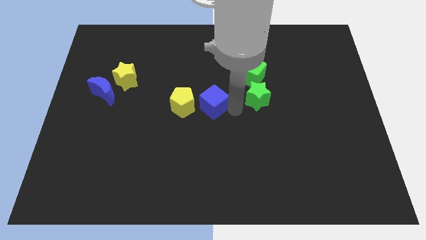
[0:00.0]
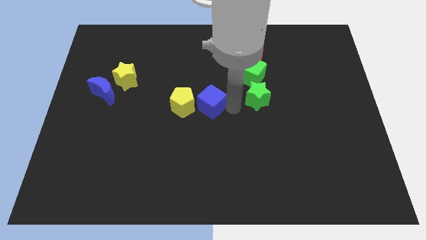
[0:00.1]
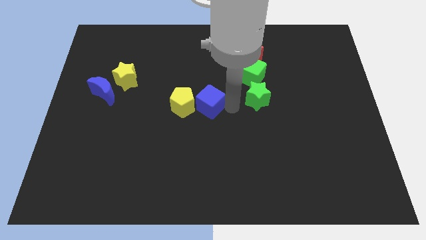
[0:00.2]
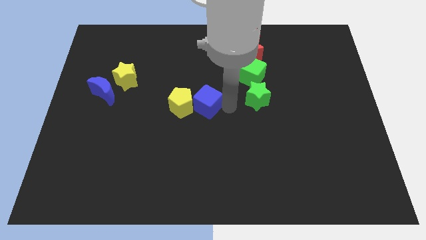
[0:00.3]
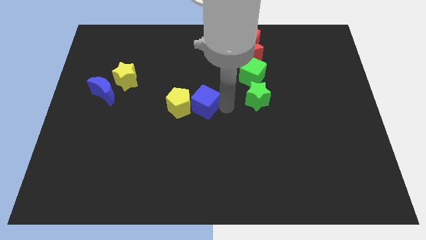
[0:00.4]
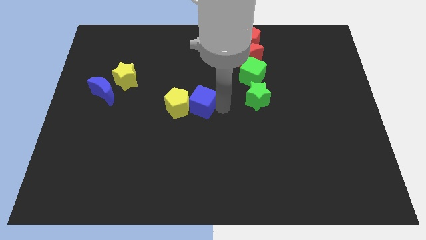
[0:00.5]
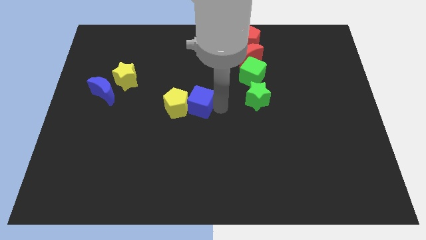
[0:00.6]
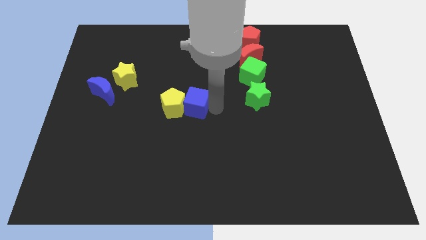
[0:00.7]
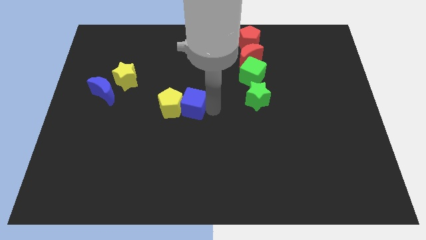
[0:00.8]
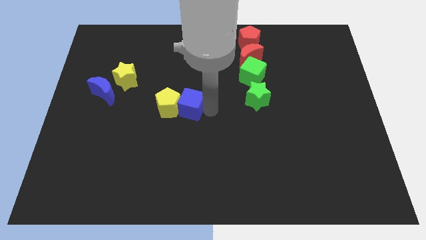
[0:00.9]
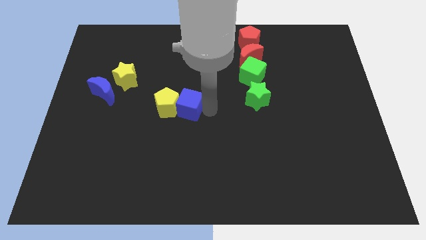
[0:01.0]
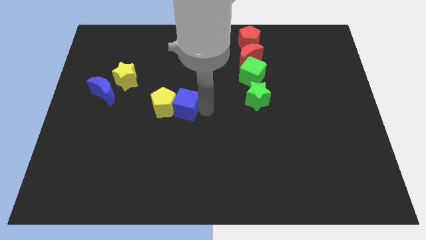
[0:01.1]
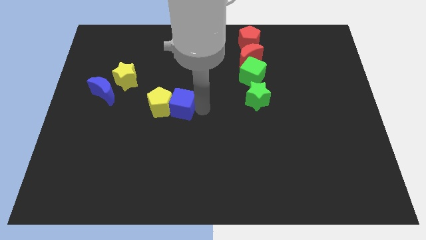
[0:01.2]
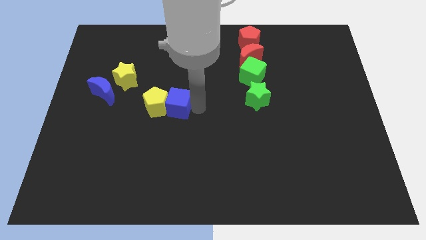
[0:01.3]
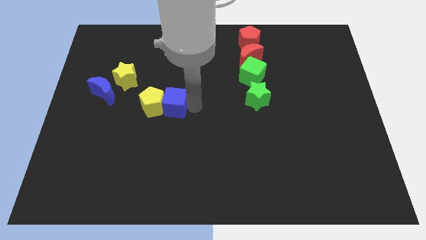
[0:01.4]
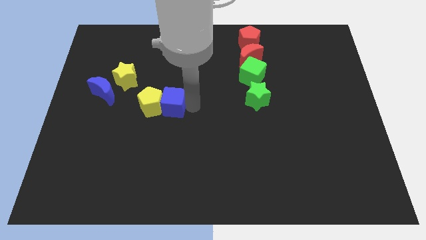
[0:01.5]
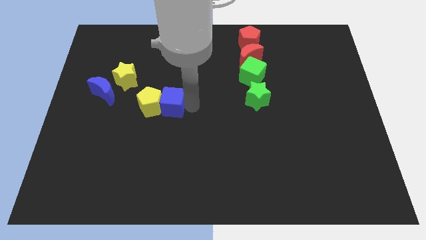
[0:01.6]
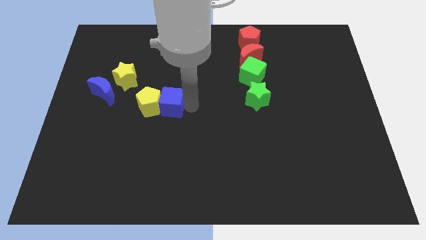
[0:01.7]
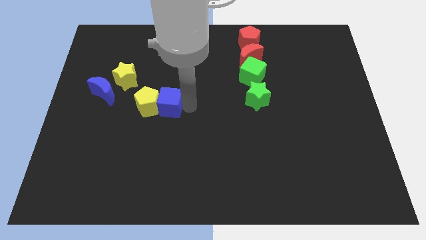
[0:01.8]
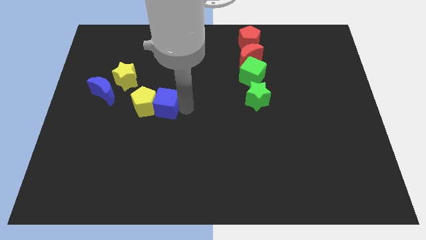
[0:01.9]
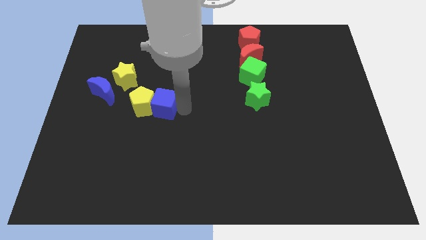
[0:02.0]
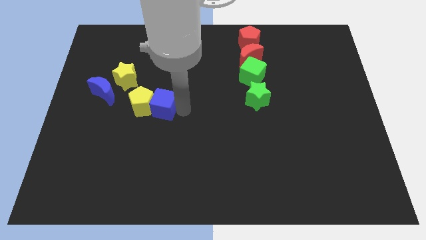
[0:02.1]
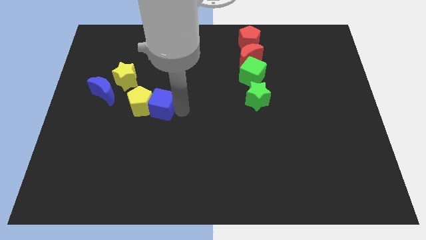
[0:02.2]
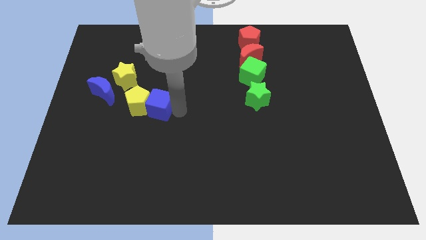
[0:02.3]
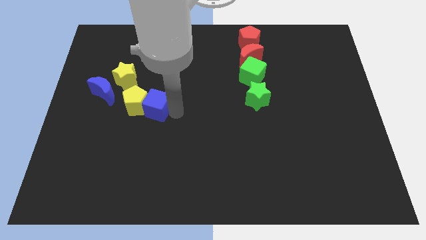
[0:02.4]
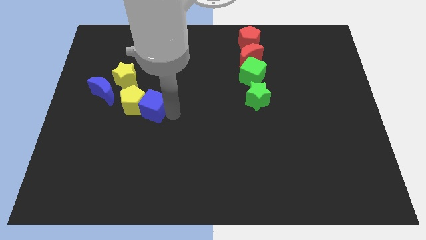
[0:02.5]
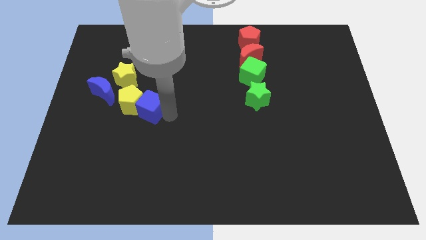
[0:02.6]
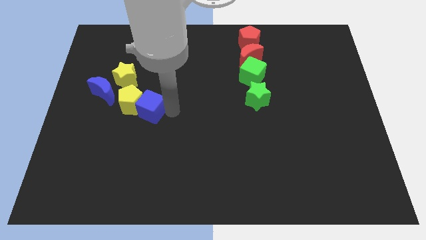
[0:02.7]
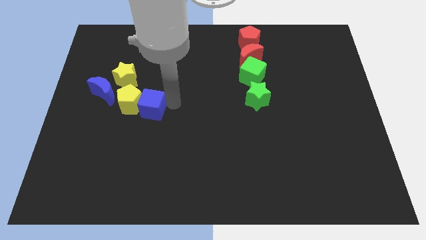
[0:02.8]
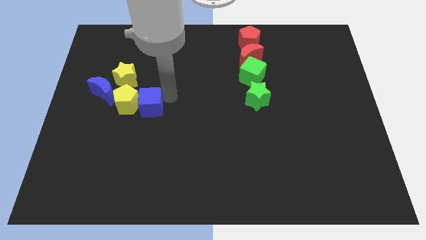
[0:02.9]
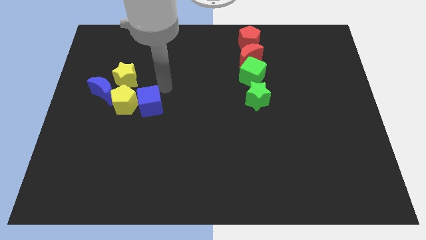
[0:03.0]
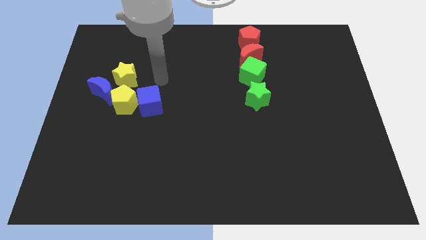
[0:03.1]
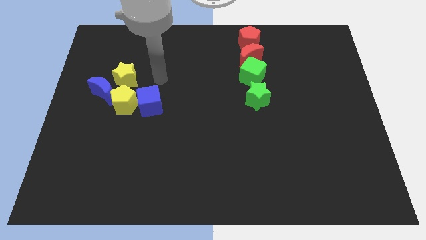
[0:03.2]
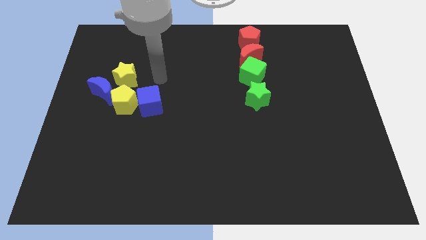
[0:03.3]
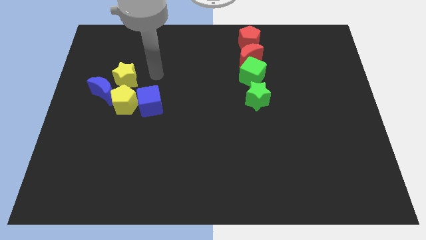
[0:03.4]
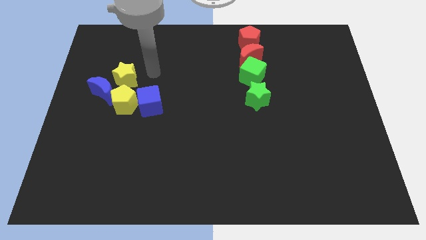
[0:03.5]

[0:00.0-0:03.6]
push the yellow pentagon along with the blue towards center left

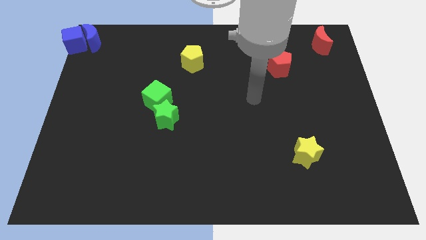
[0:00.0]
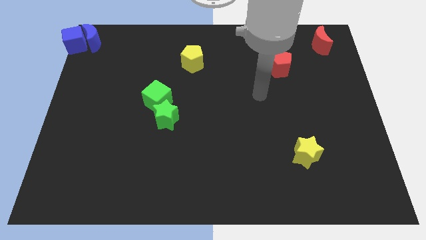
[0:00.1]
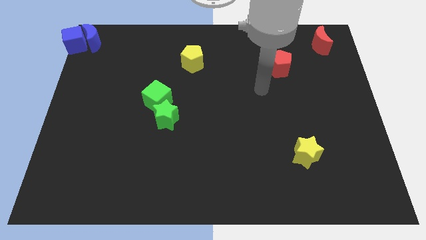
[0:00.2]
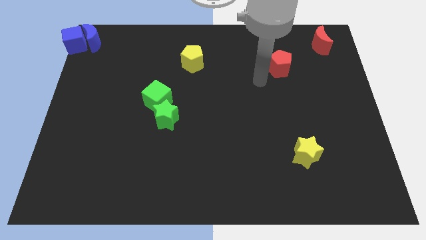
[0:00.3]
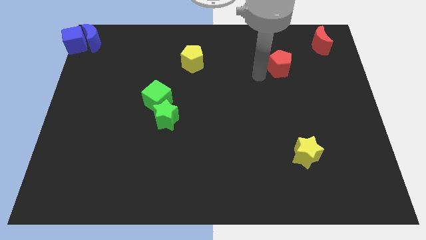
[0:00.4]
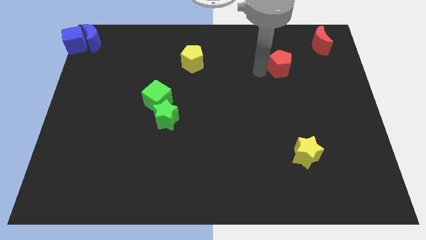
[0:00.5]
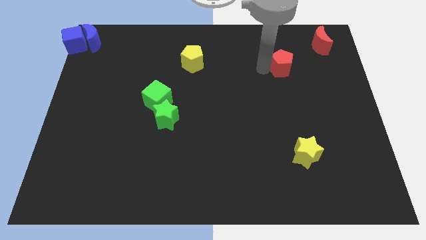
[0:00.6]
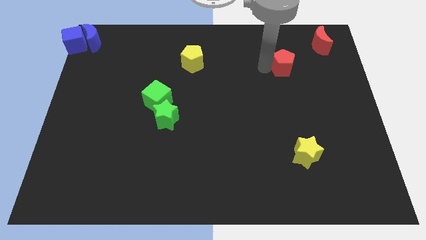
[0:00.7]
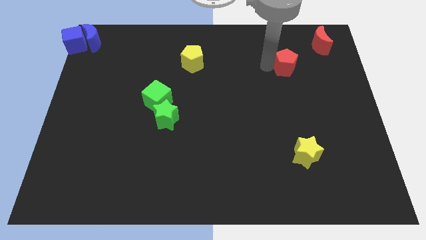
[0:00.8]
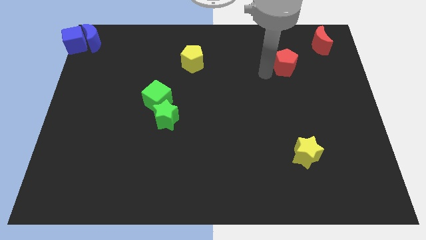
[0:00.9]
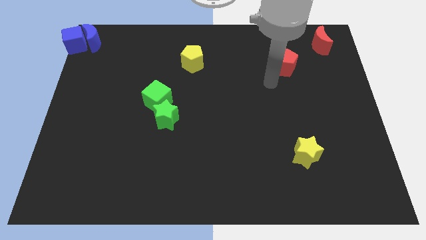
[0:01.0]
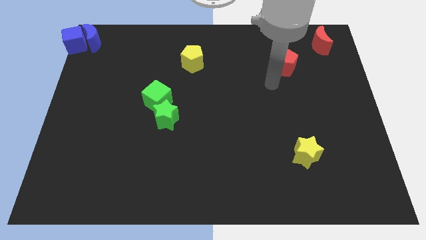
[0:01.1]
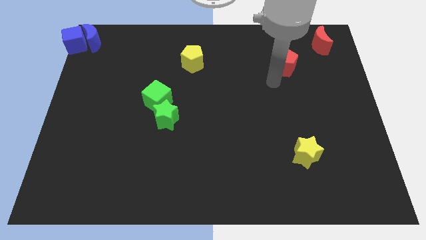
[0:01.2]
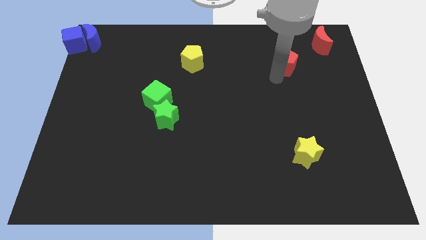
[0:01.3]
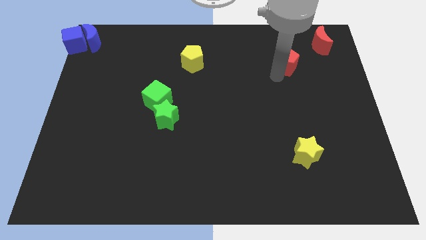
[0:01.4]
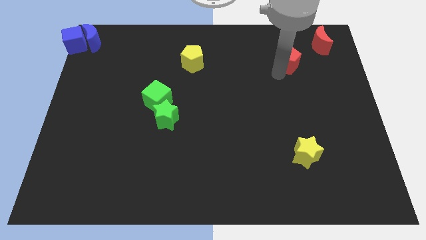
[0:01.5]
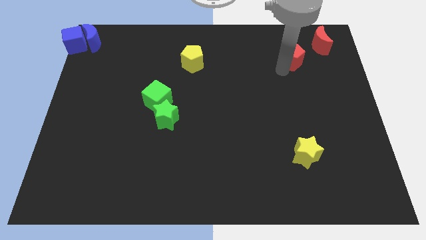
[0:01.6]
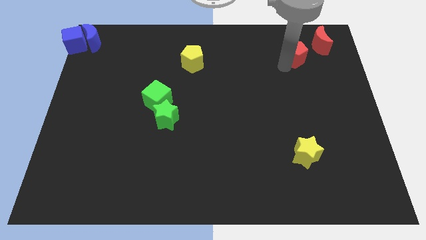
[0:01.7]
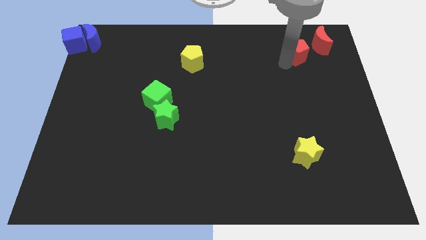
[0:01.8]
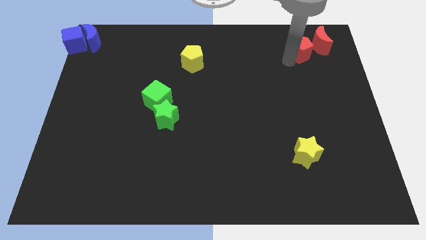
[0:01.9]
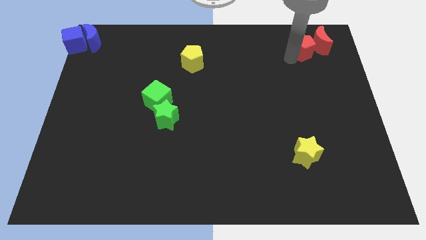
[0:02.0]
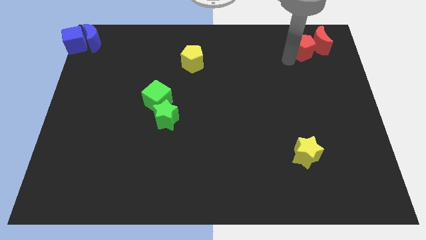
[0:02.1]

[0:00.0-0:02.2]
move the red pentagon towards the left side of the red crescent

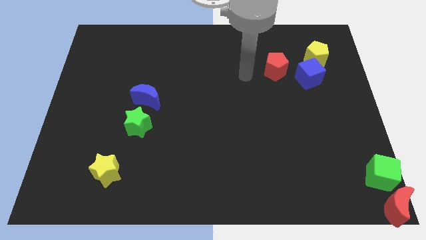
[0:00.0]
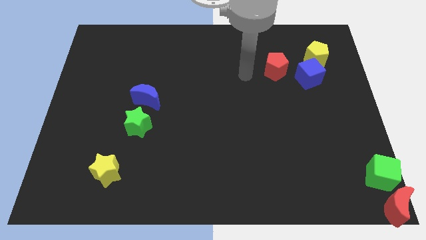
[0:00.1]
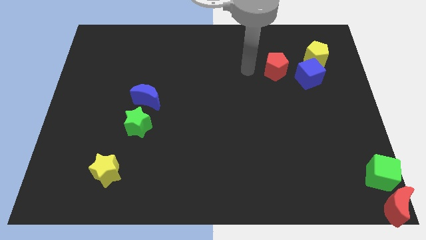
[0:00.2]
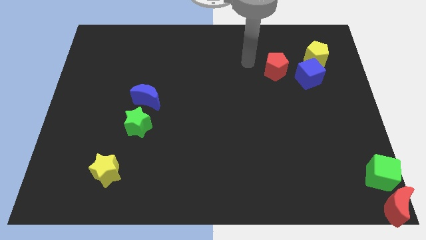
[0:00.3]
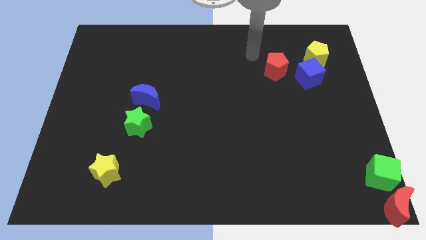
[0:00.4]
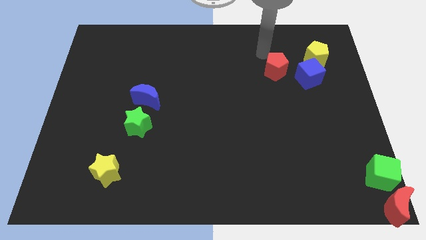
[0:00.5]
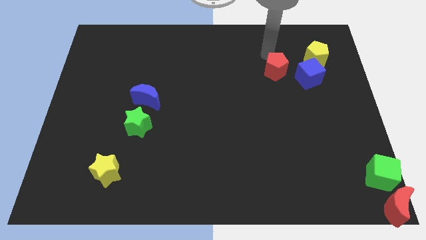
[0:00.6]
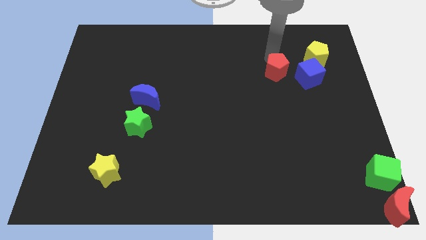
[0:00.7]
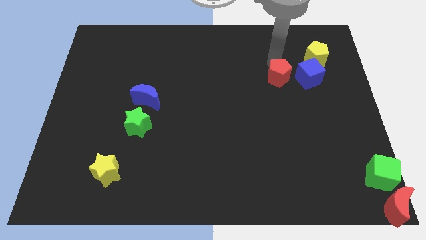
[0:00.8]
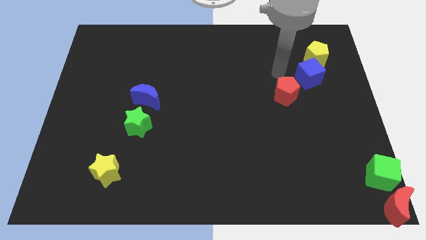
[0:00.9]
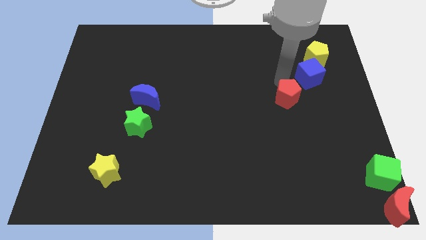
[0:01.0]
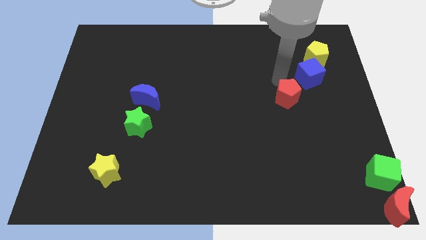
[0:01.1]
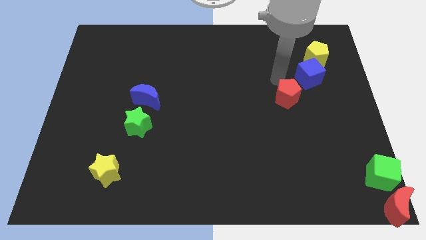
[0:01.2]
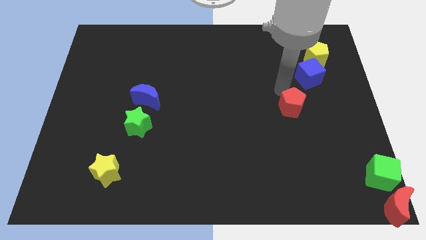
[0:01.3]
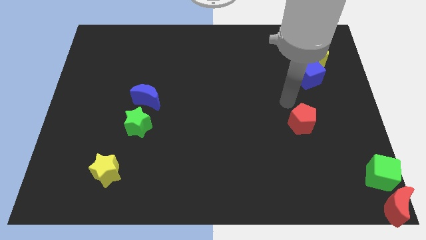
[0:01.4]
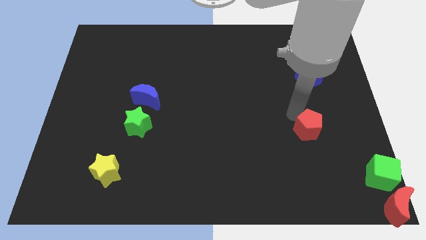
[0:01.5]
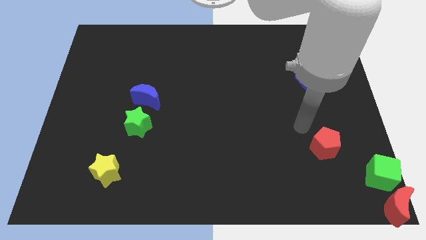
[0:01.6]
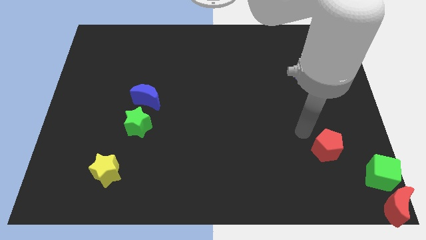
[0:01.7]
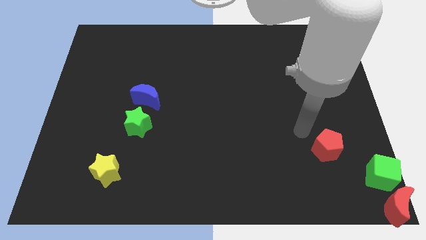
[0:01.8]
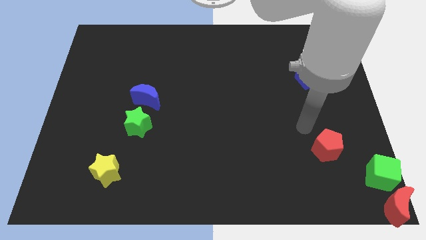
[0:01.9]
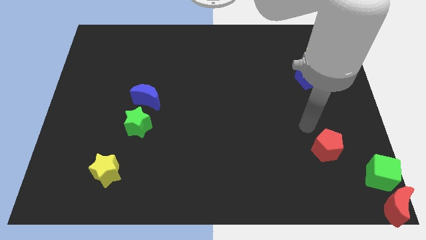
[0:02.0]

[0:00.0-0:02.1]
slide the red pentagon towards the bottom right corner of the board

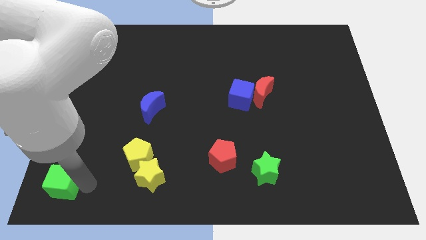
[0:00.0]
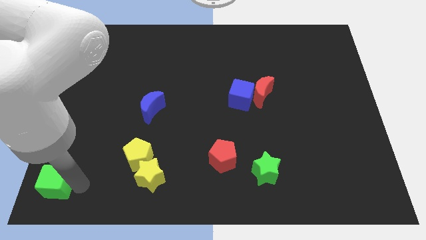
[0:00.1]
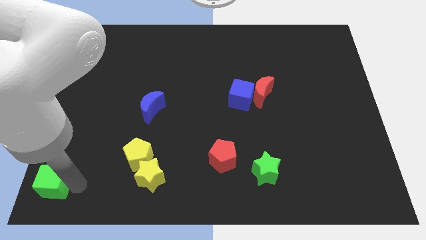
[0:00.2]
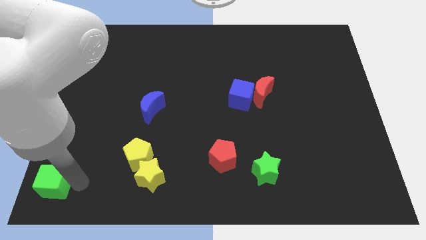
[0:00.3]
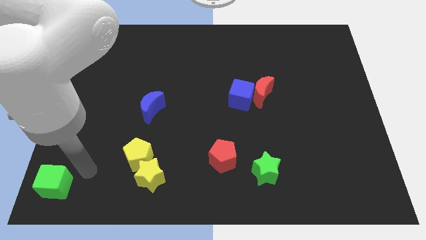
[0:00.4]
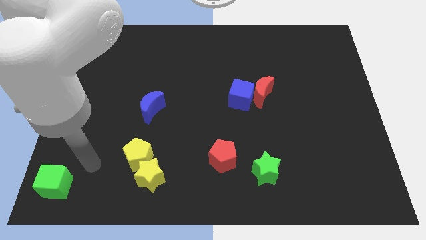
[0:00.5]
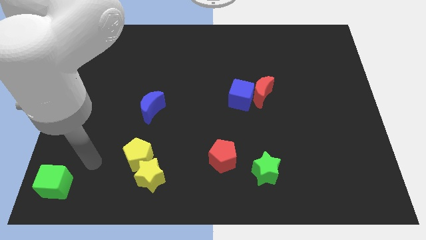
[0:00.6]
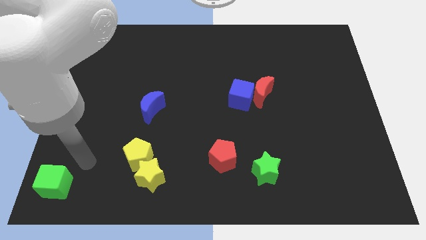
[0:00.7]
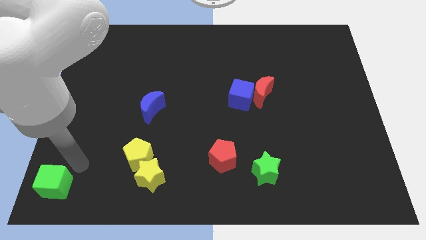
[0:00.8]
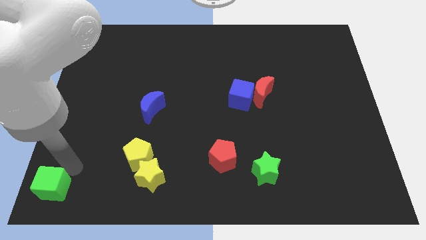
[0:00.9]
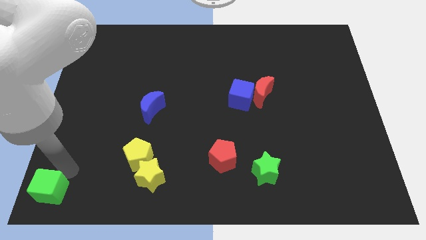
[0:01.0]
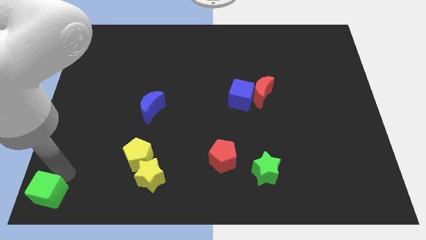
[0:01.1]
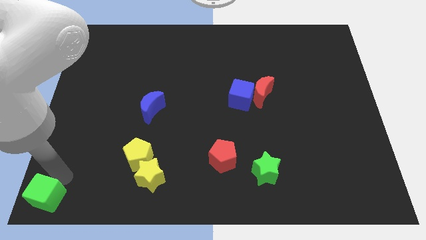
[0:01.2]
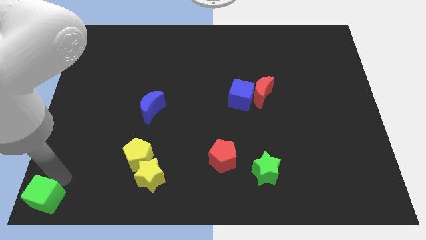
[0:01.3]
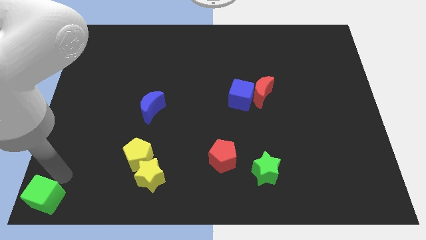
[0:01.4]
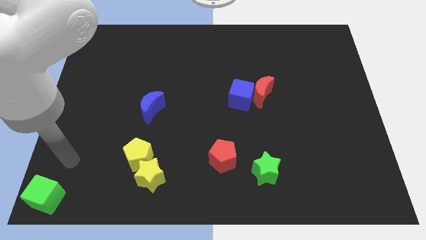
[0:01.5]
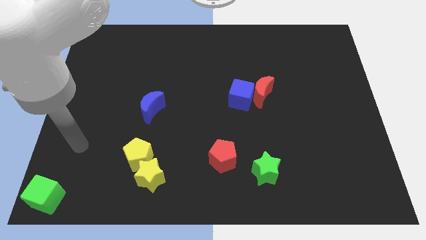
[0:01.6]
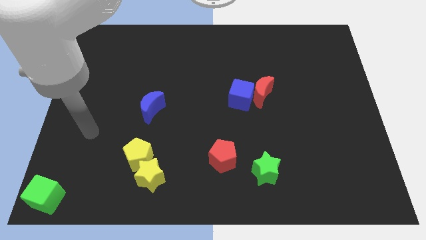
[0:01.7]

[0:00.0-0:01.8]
place the green cube at the bottom left corner of the board
